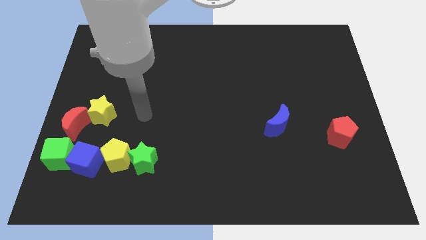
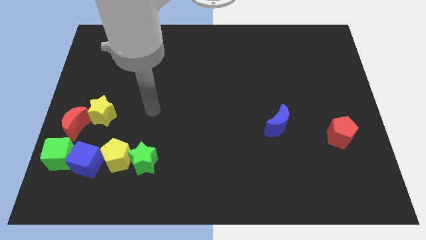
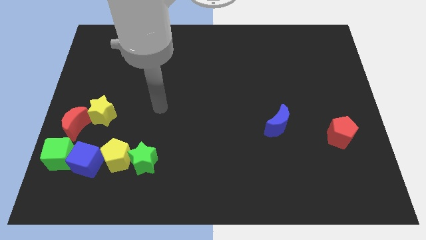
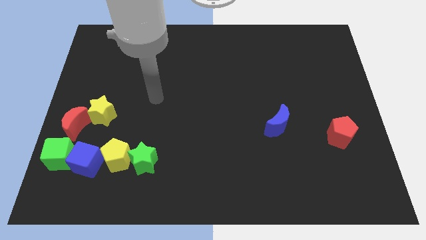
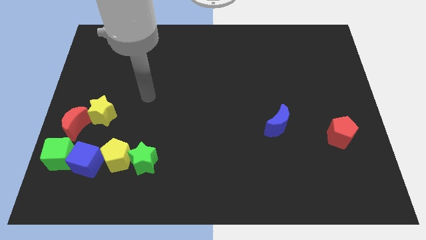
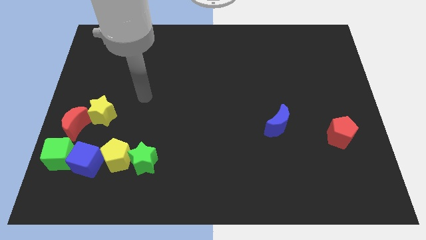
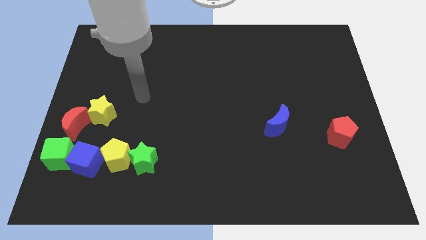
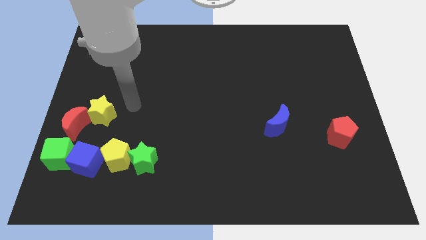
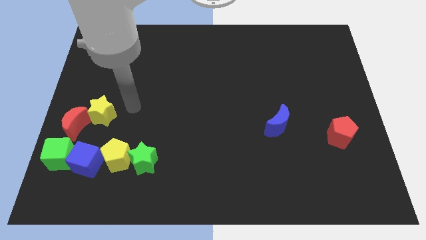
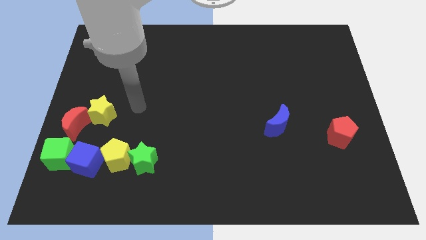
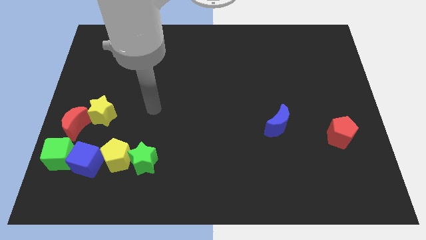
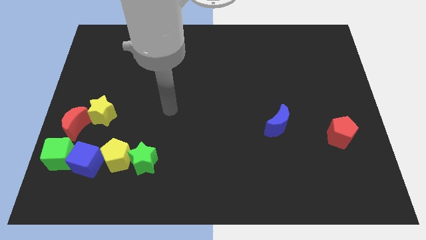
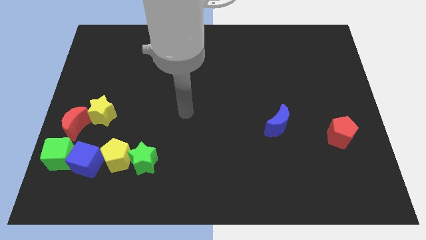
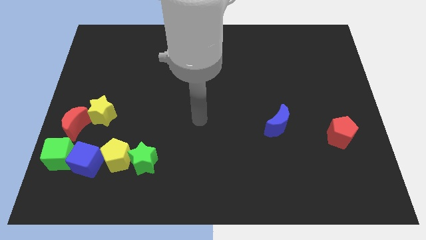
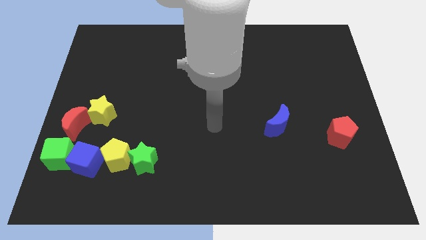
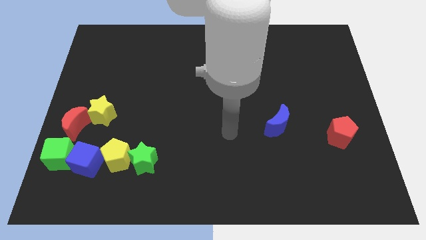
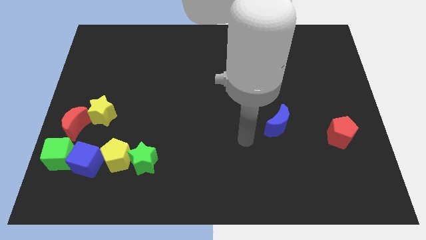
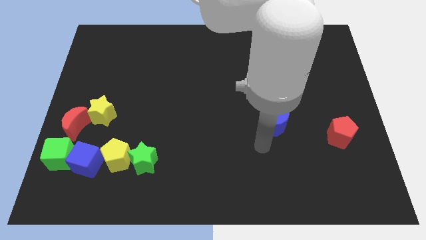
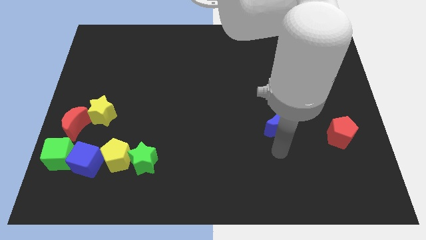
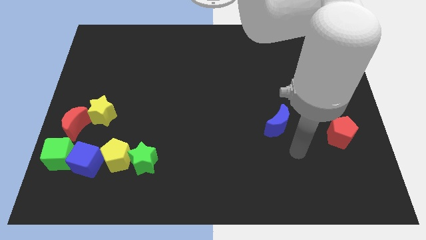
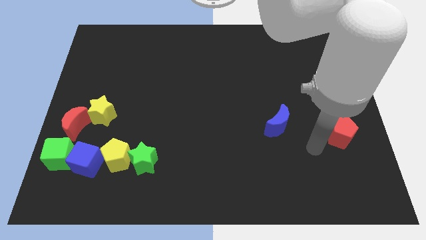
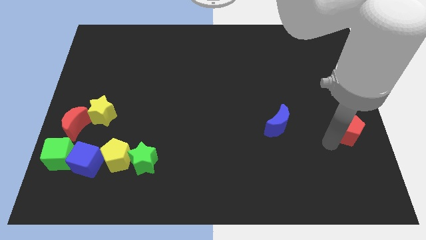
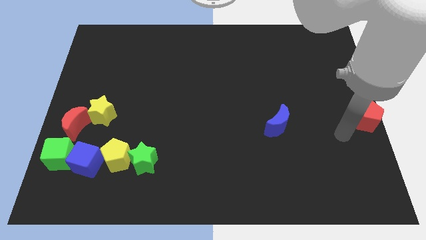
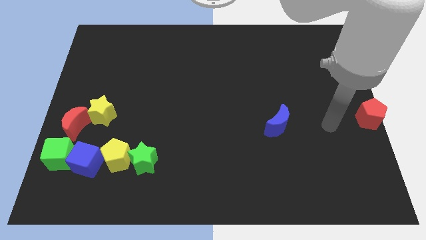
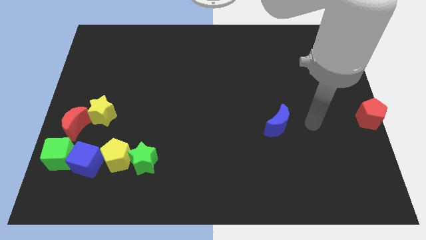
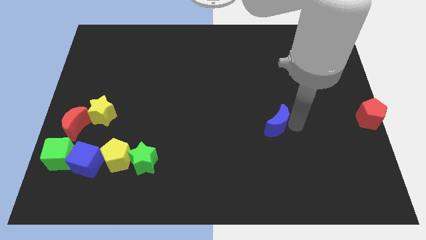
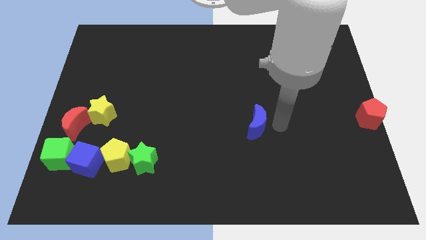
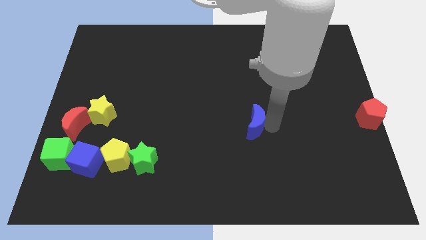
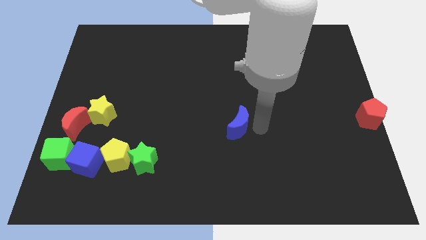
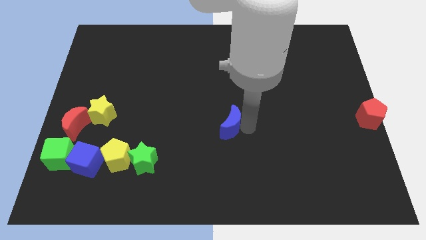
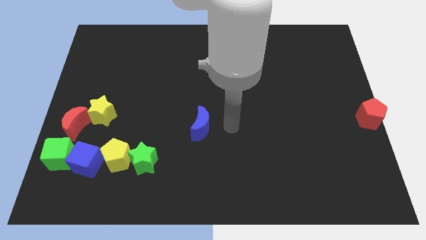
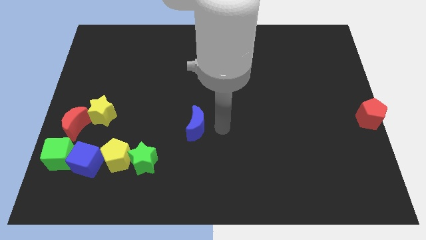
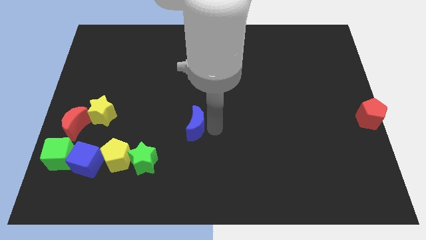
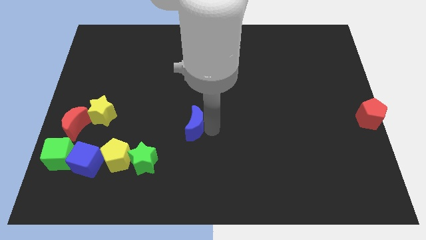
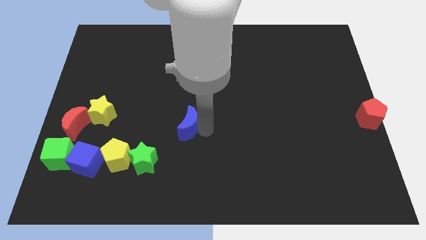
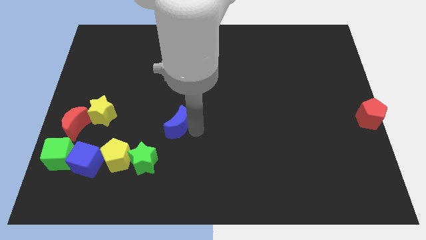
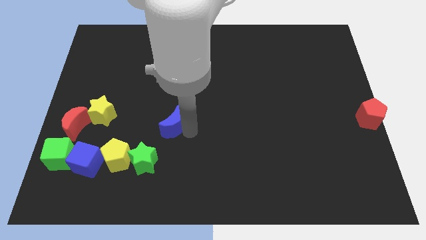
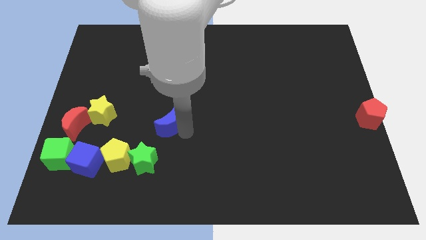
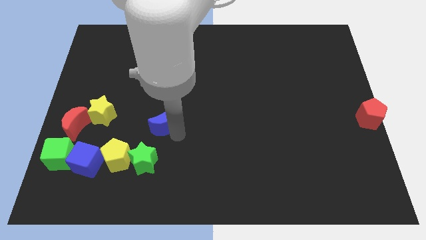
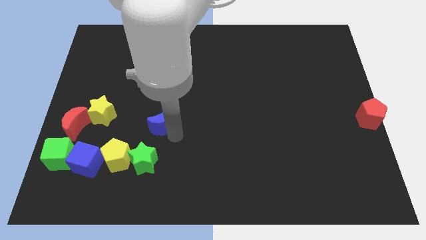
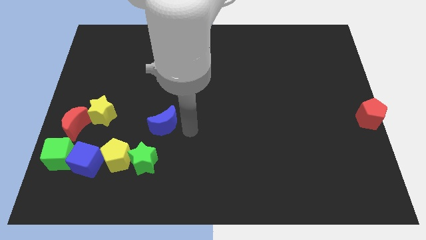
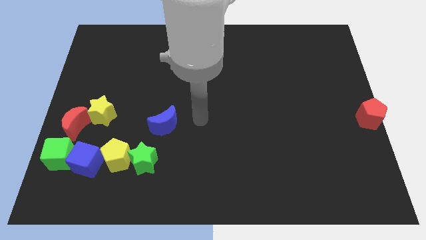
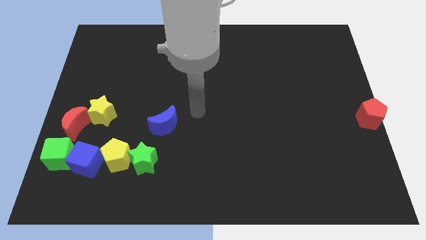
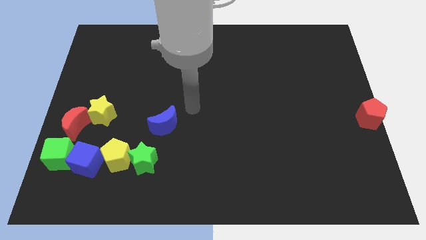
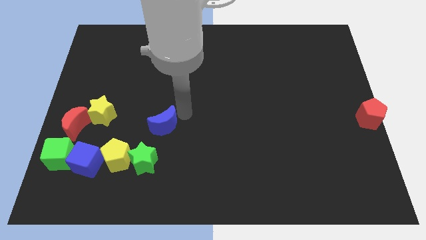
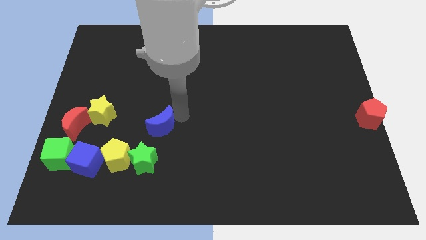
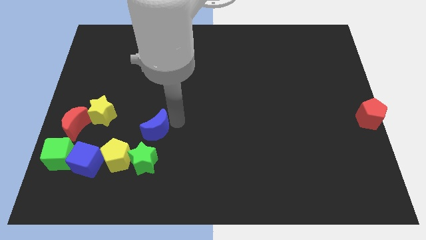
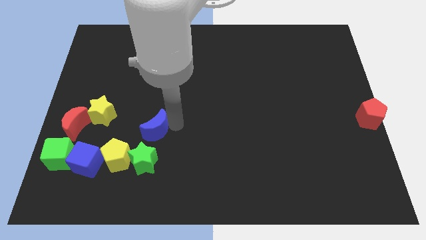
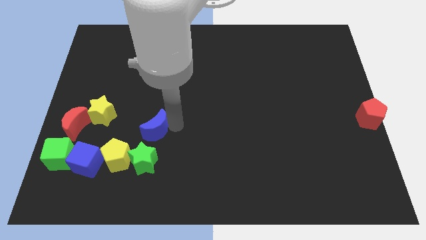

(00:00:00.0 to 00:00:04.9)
place the blue crescent above the green star

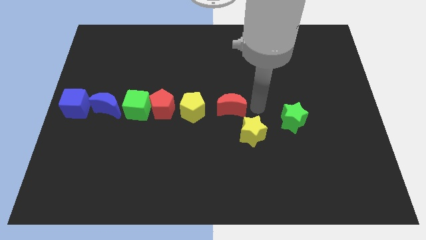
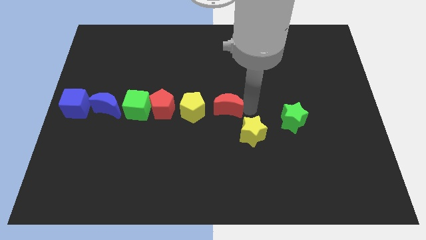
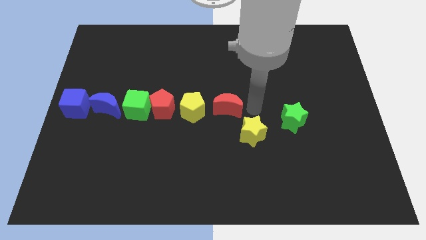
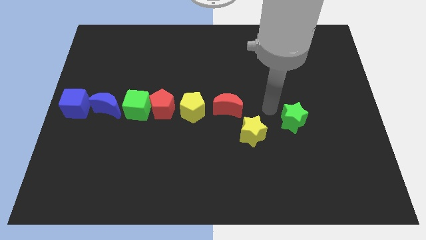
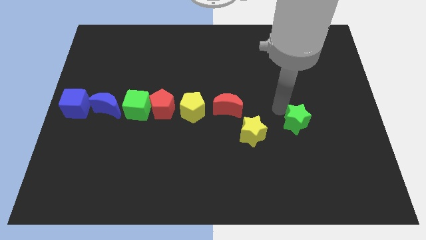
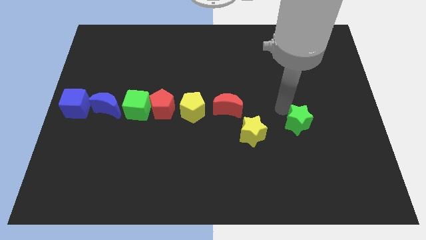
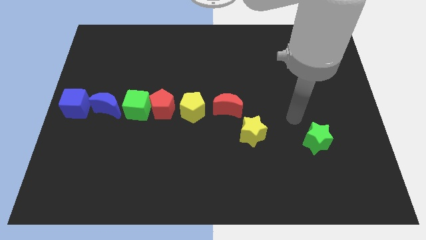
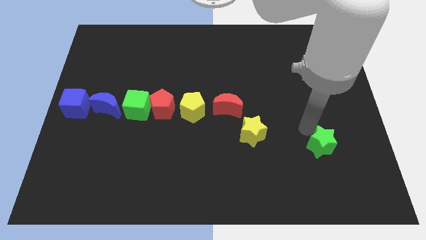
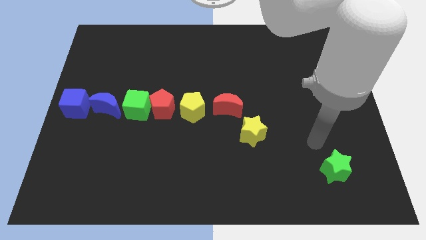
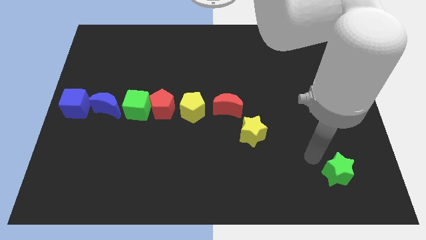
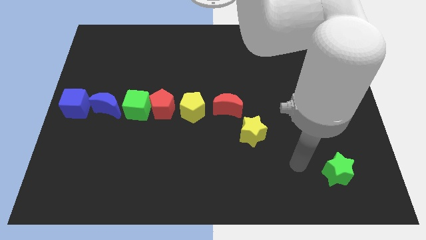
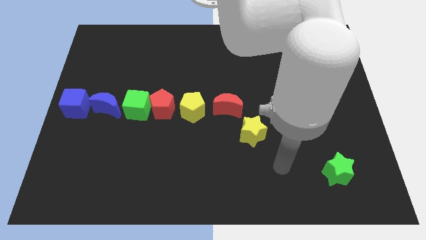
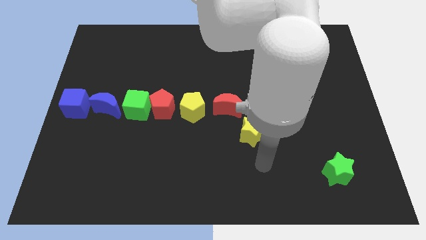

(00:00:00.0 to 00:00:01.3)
push the green star to the bottom right side

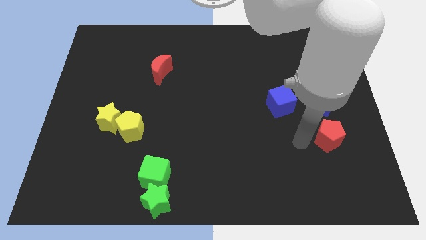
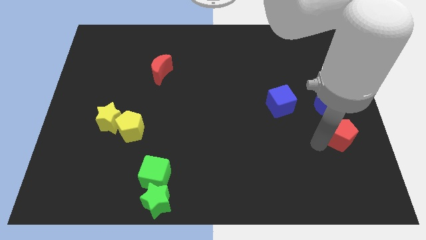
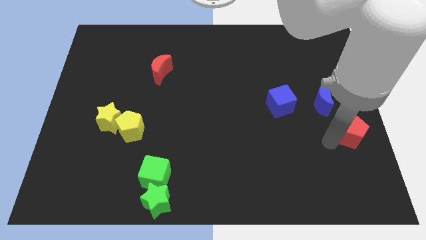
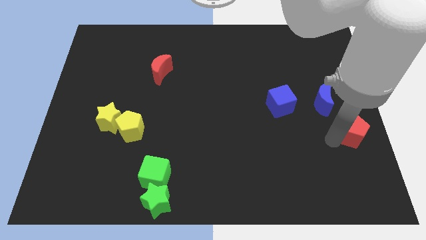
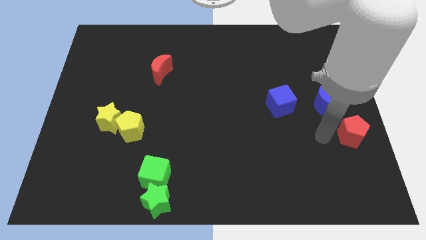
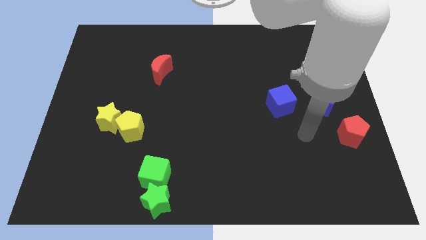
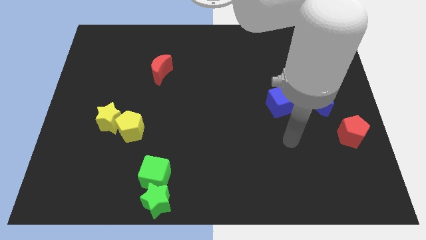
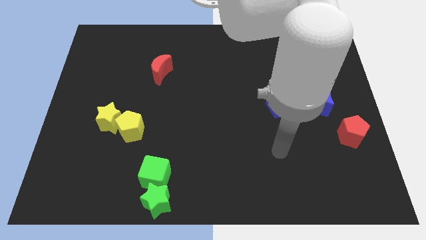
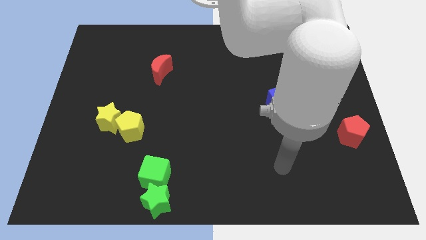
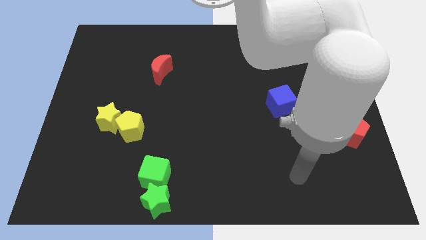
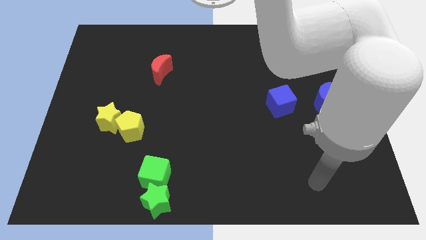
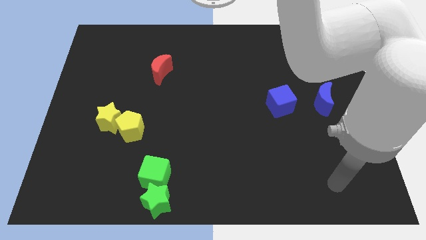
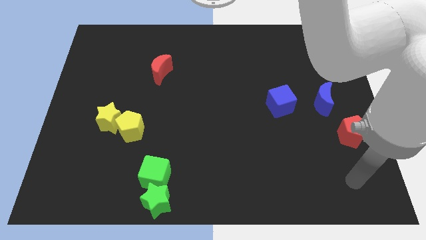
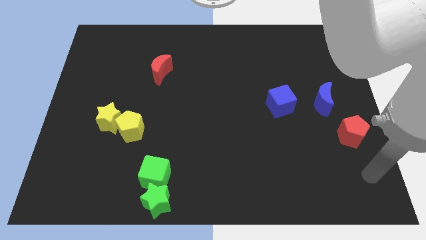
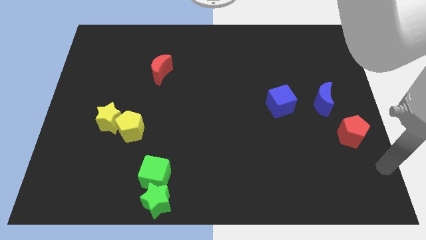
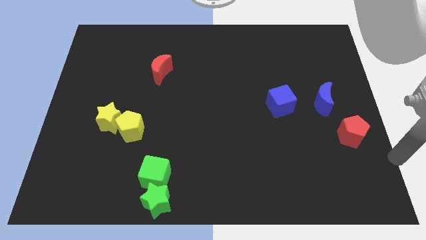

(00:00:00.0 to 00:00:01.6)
slightly move the red pentagon to the right

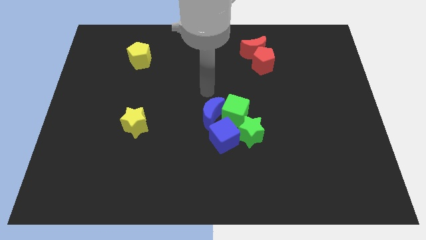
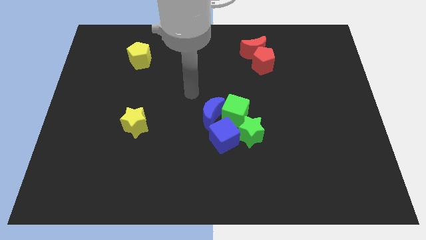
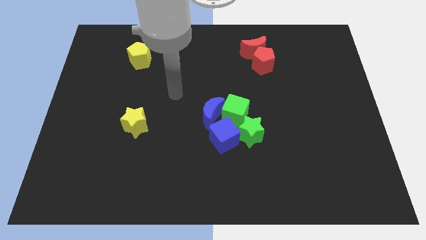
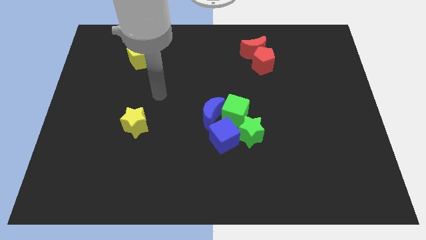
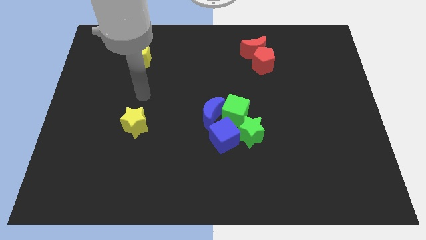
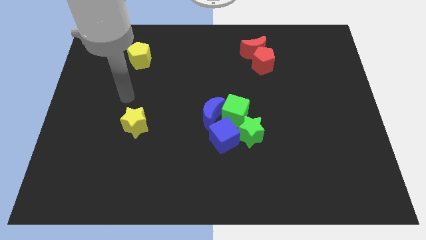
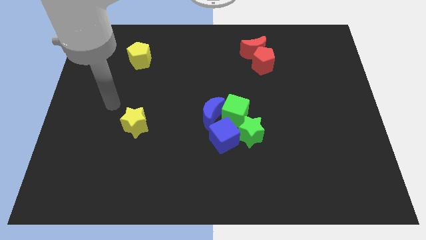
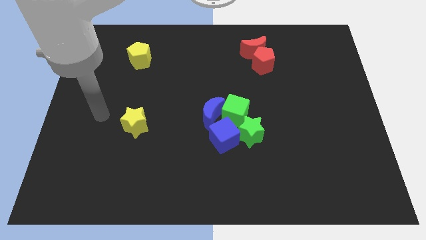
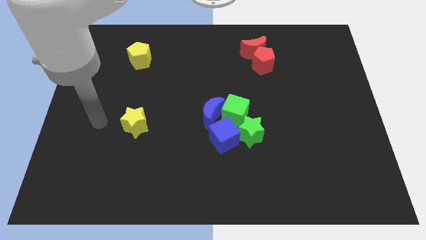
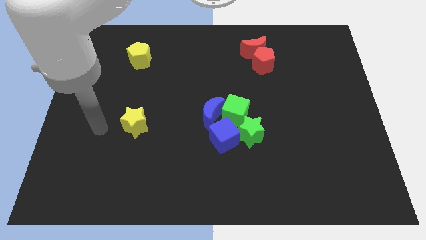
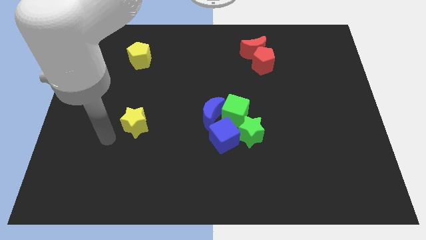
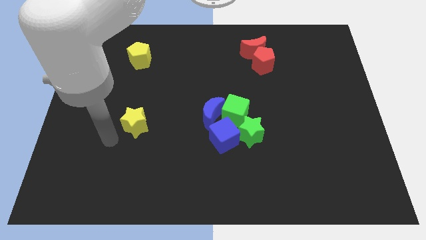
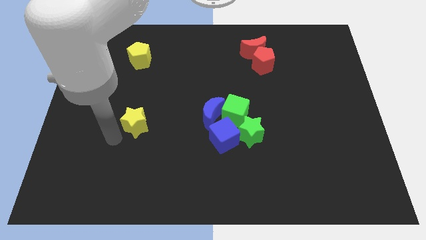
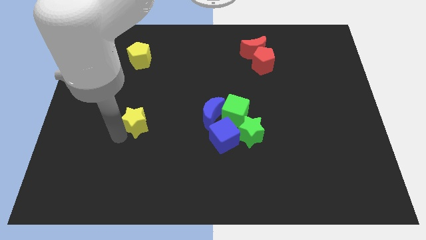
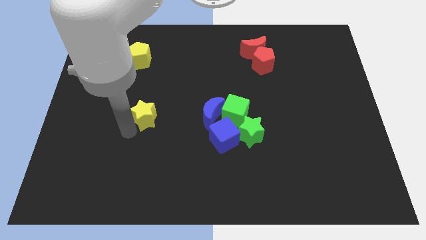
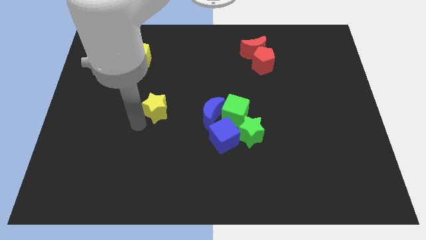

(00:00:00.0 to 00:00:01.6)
touch the yellow star
